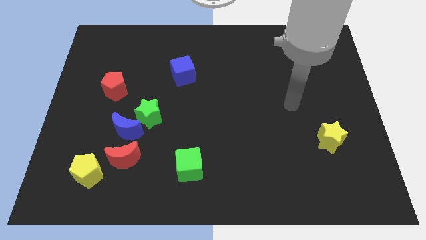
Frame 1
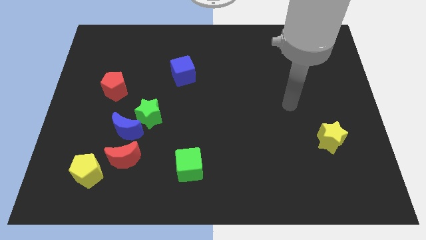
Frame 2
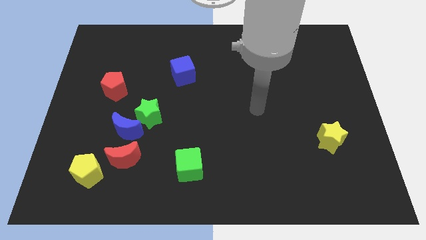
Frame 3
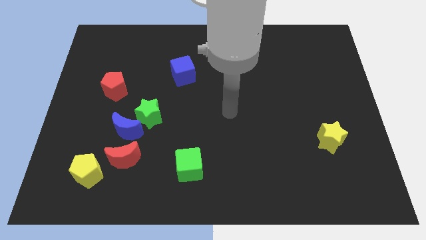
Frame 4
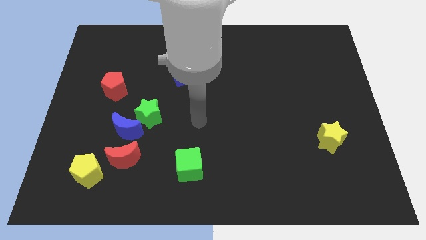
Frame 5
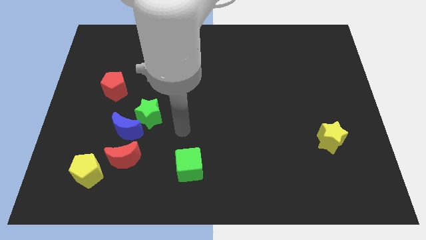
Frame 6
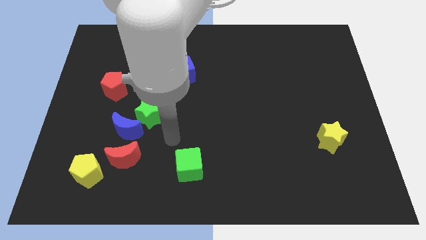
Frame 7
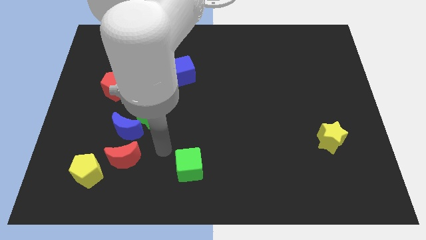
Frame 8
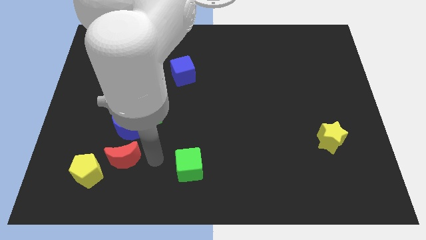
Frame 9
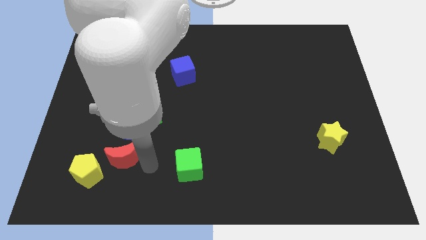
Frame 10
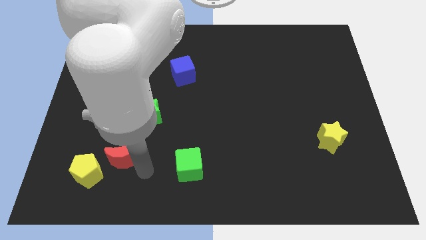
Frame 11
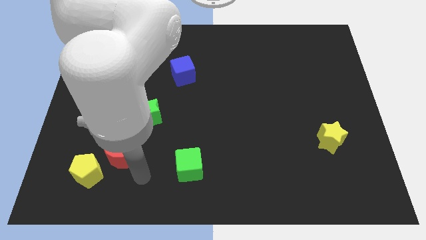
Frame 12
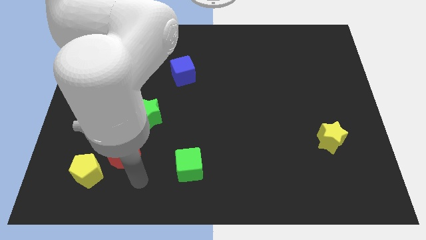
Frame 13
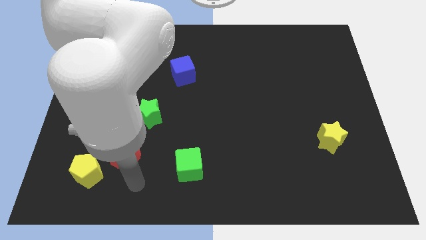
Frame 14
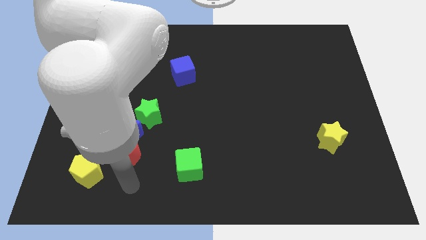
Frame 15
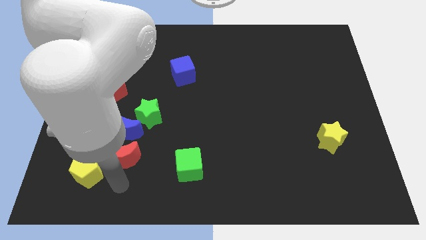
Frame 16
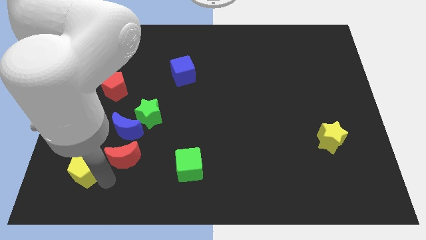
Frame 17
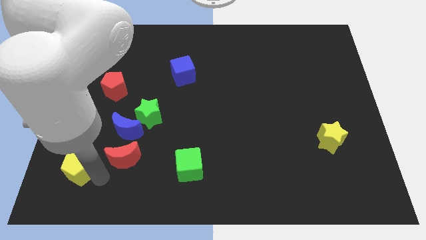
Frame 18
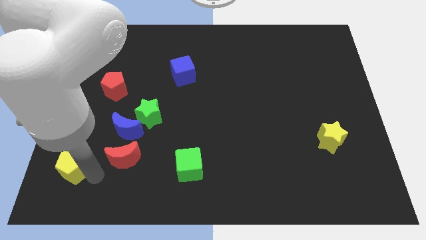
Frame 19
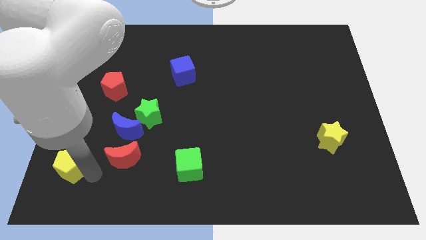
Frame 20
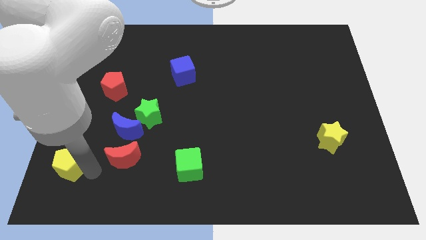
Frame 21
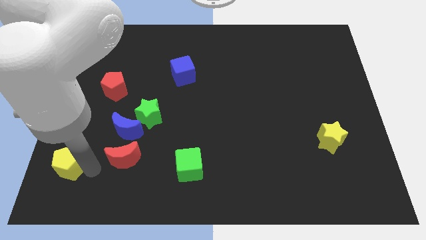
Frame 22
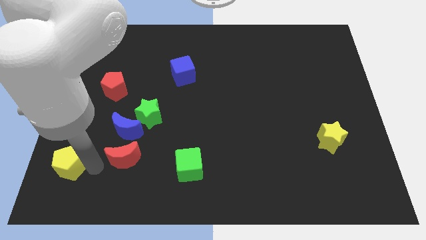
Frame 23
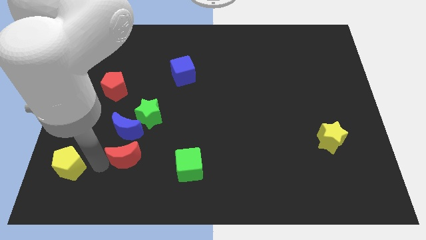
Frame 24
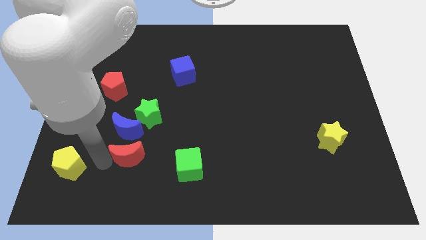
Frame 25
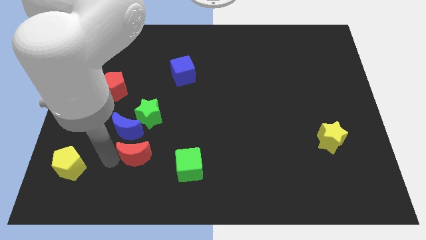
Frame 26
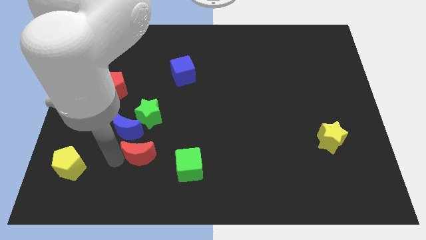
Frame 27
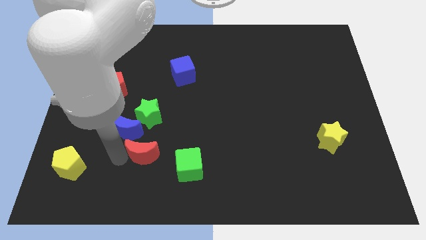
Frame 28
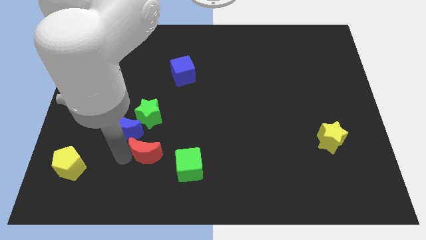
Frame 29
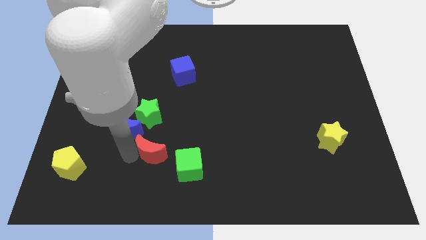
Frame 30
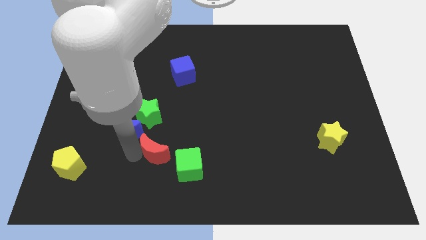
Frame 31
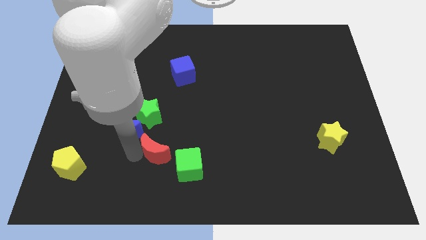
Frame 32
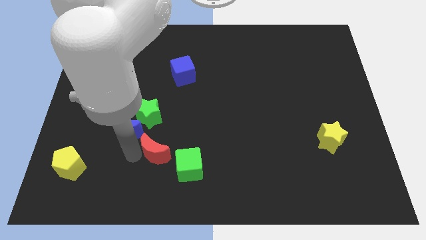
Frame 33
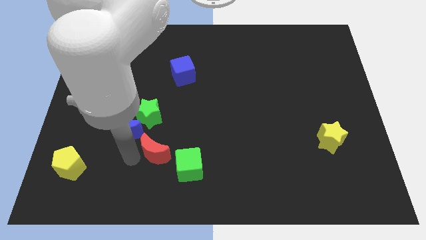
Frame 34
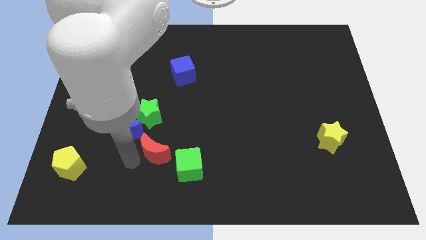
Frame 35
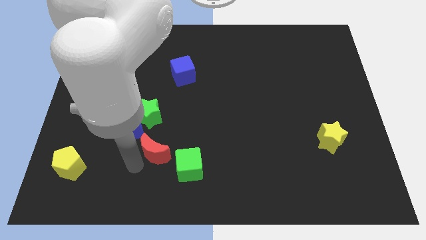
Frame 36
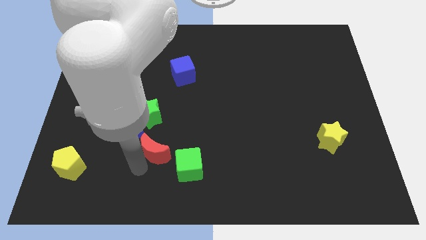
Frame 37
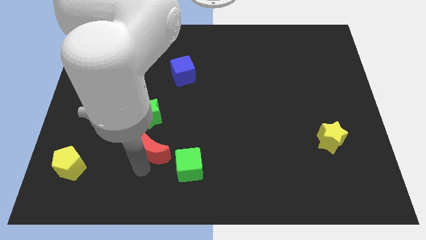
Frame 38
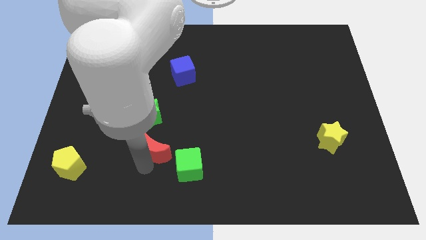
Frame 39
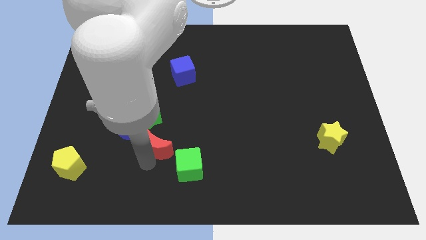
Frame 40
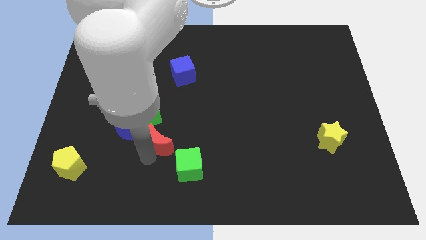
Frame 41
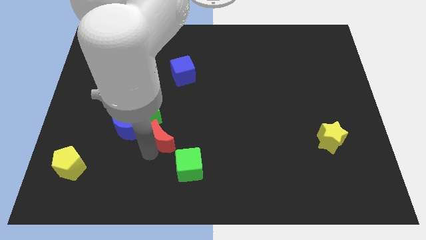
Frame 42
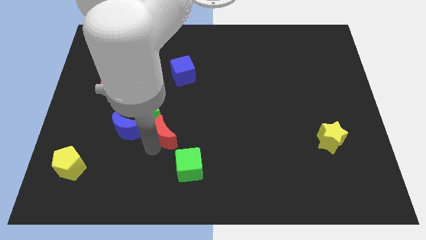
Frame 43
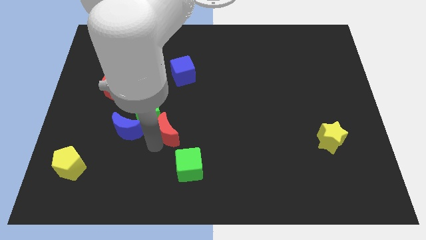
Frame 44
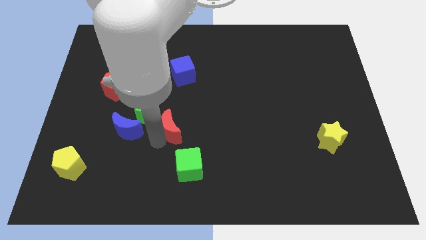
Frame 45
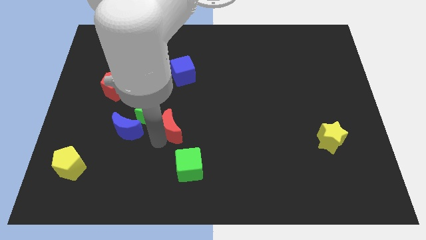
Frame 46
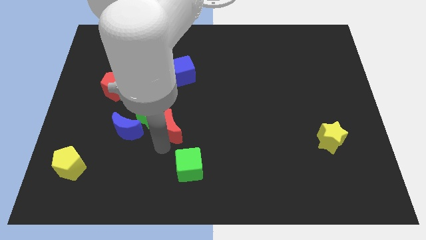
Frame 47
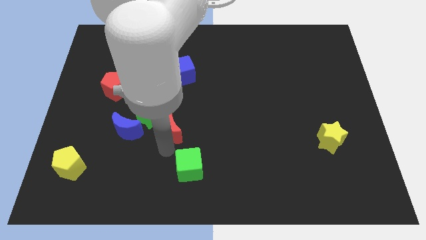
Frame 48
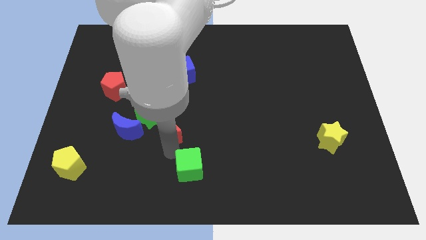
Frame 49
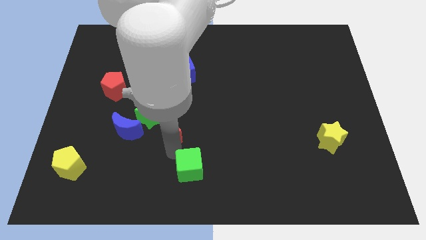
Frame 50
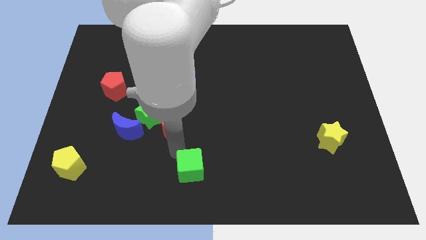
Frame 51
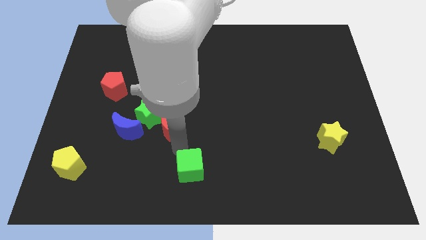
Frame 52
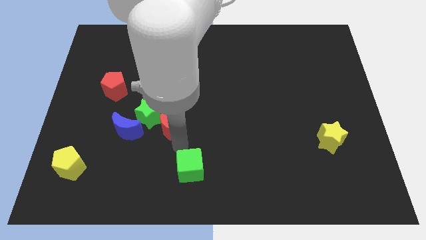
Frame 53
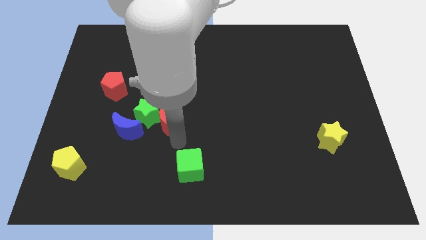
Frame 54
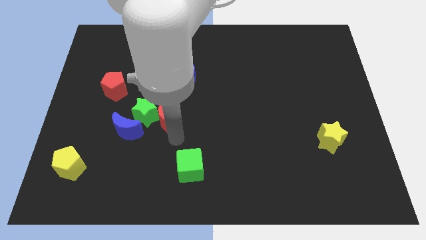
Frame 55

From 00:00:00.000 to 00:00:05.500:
put the red moon next to the green star

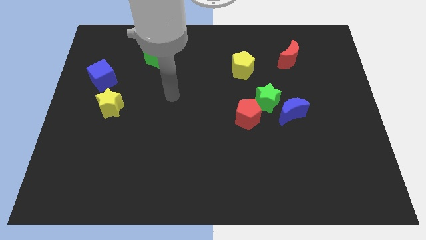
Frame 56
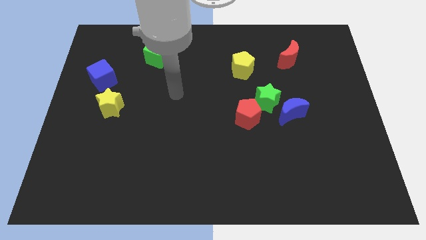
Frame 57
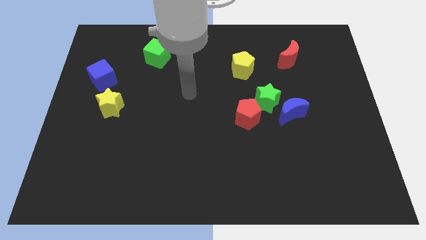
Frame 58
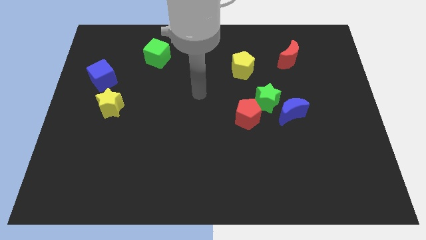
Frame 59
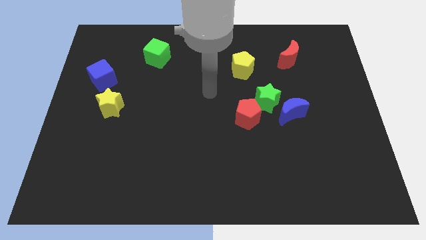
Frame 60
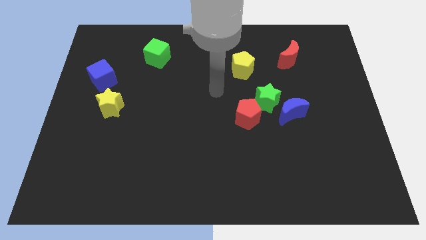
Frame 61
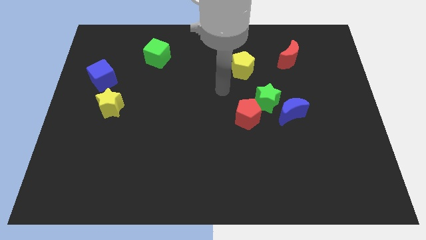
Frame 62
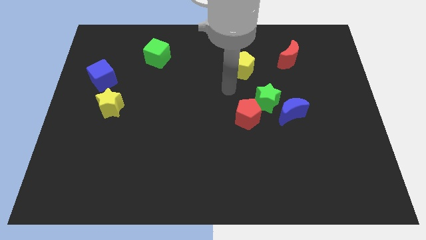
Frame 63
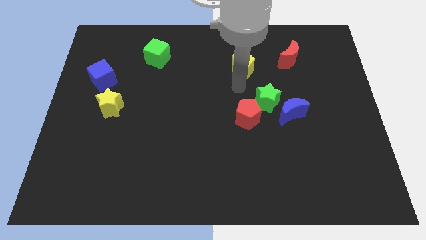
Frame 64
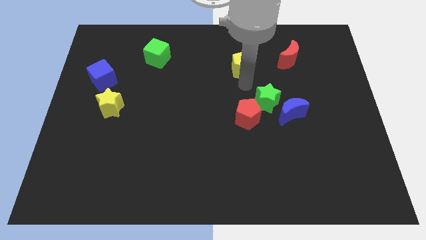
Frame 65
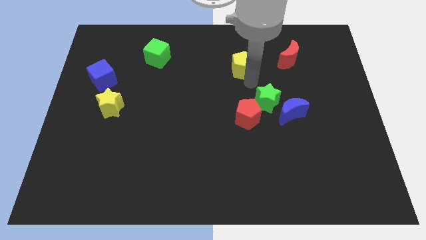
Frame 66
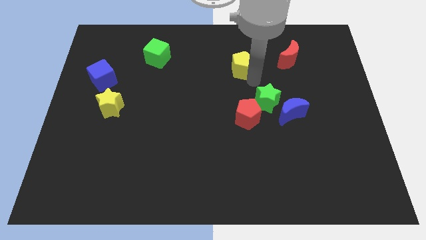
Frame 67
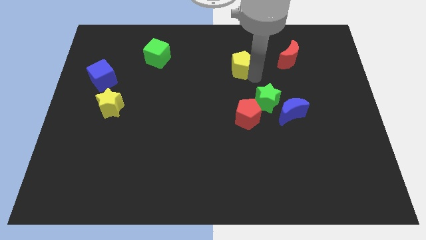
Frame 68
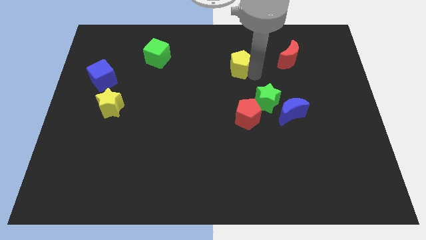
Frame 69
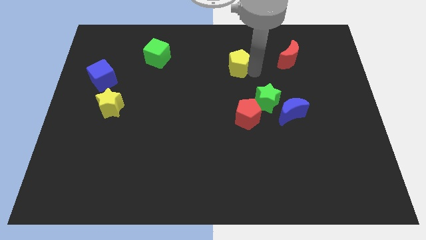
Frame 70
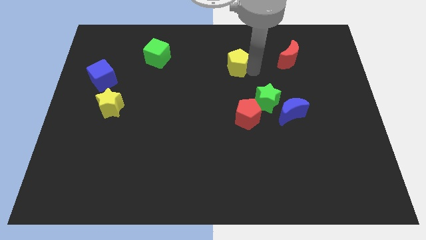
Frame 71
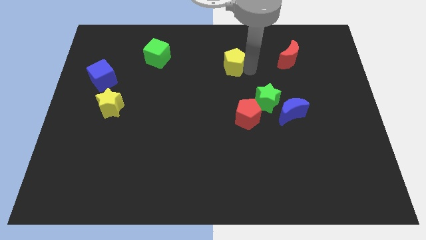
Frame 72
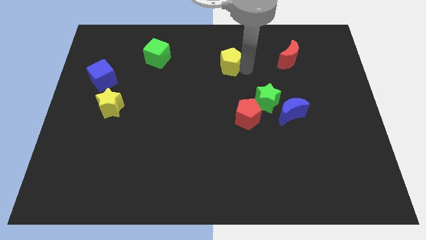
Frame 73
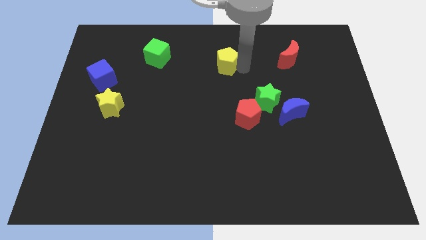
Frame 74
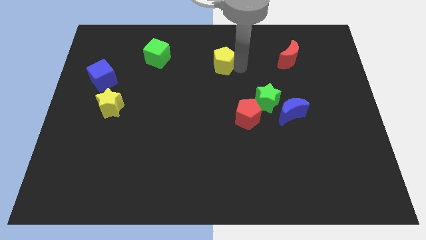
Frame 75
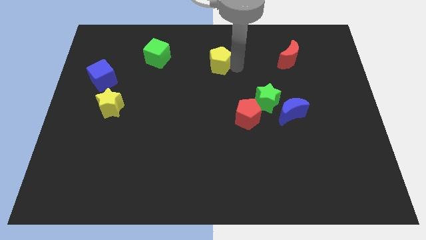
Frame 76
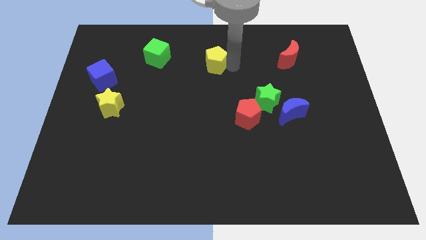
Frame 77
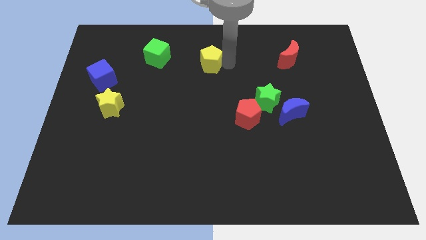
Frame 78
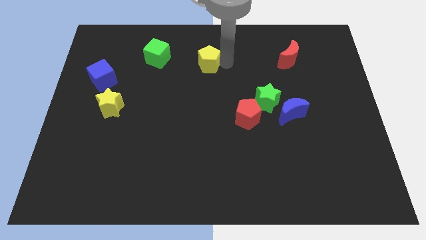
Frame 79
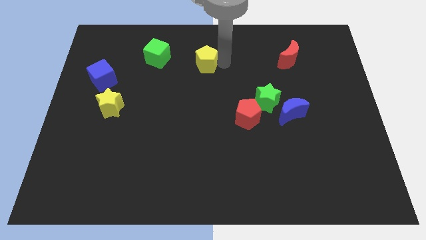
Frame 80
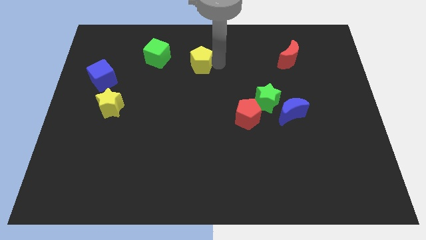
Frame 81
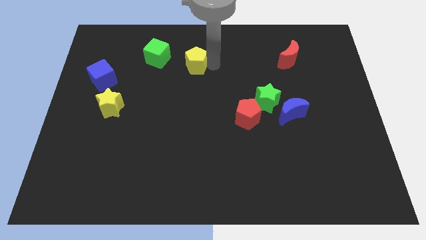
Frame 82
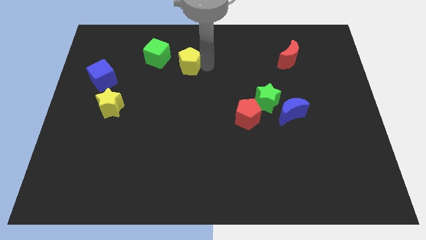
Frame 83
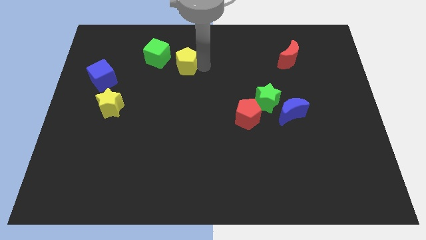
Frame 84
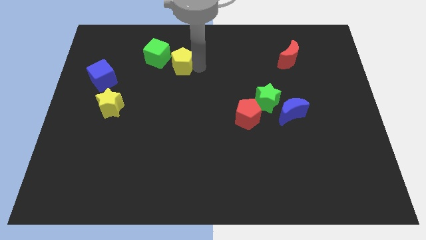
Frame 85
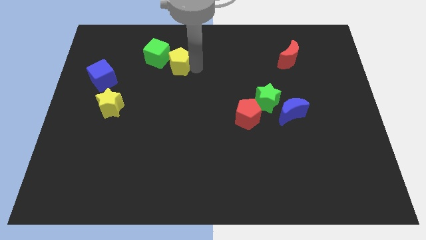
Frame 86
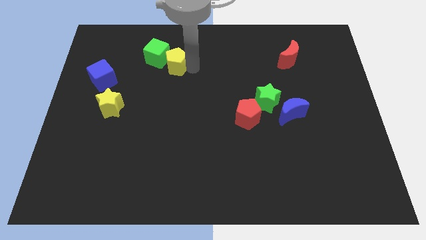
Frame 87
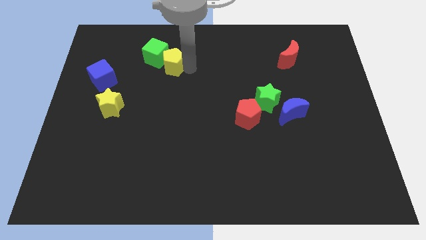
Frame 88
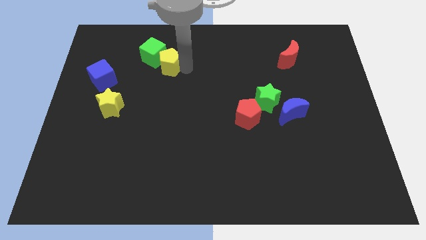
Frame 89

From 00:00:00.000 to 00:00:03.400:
put the yellow pentagon towards the green cube
